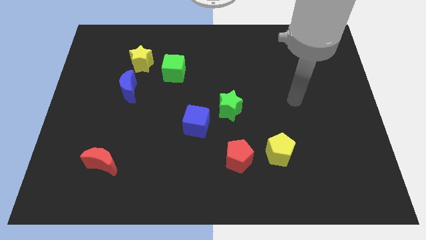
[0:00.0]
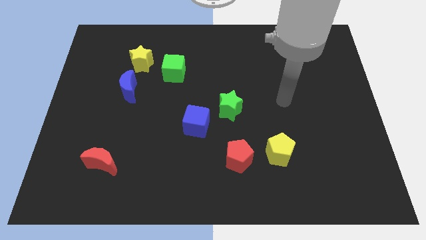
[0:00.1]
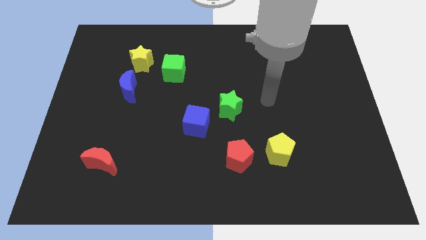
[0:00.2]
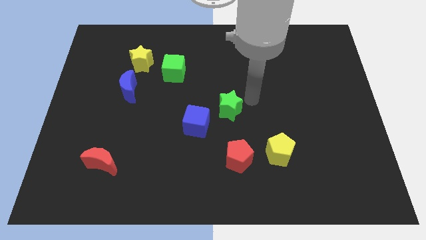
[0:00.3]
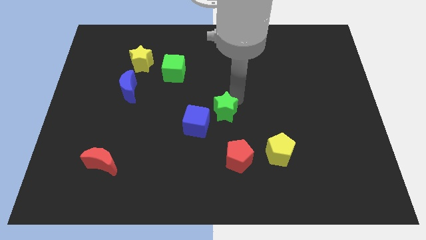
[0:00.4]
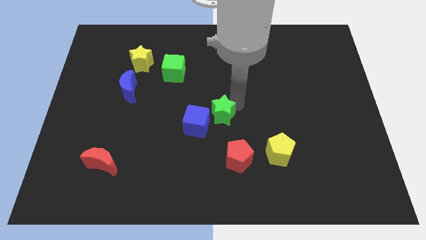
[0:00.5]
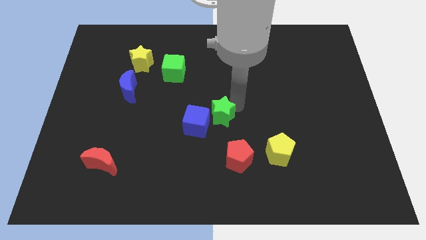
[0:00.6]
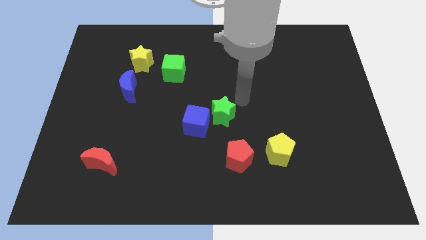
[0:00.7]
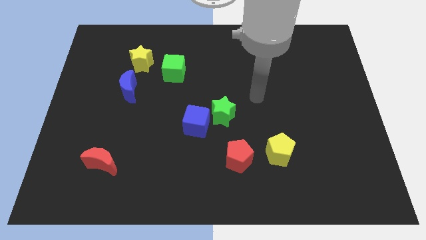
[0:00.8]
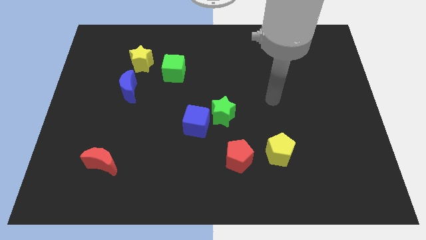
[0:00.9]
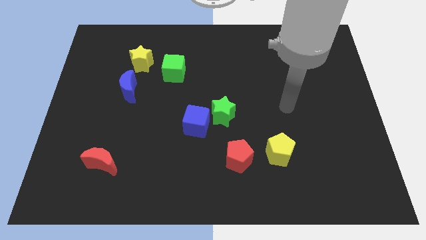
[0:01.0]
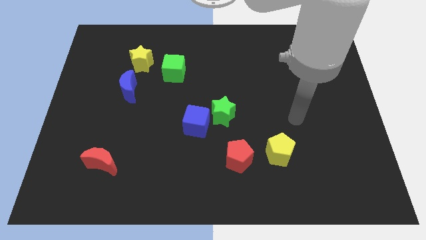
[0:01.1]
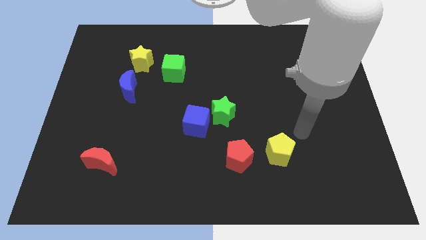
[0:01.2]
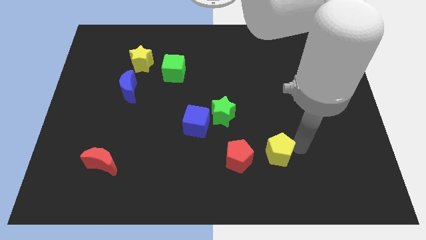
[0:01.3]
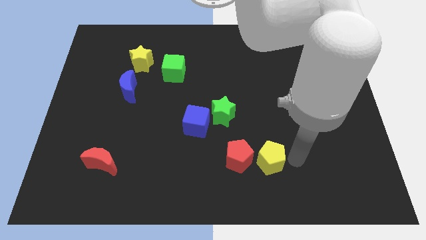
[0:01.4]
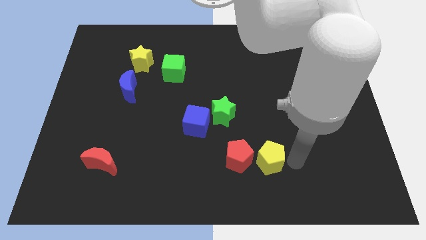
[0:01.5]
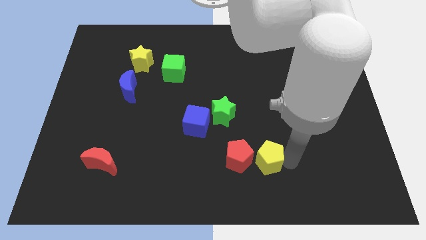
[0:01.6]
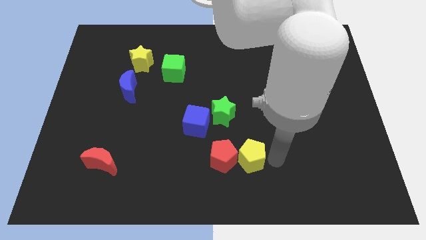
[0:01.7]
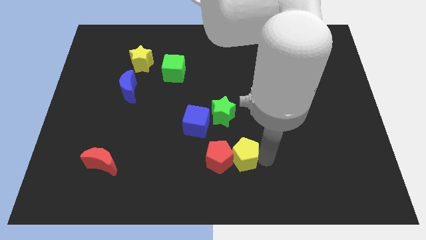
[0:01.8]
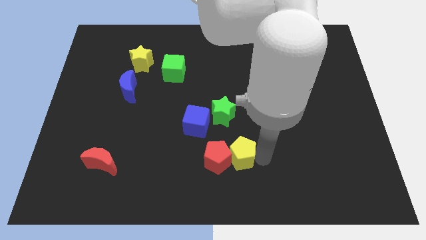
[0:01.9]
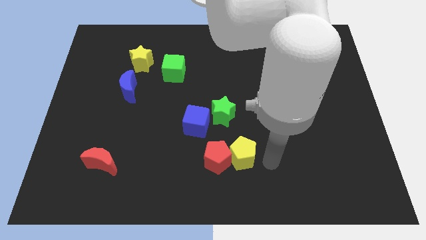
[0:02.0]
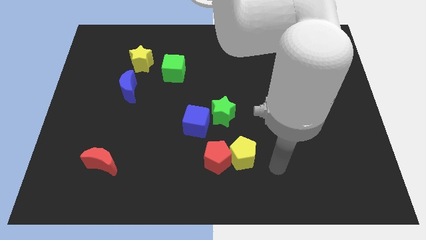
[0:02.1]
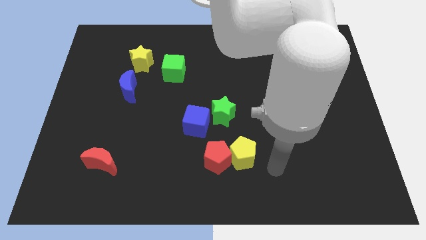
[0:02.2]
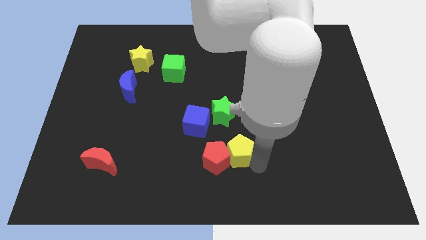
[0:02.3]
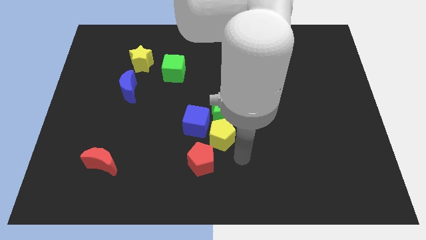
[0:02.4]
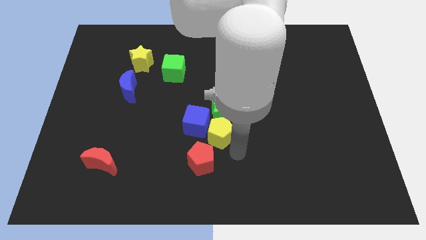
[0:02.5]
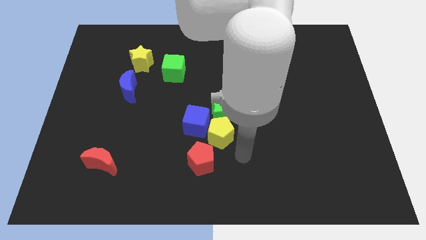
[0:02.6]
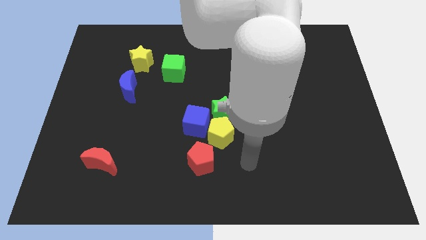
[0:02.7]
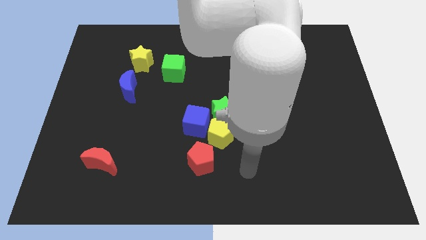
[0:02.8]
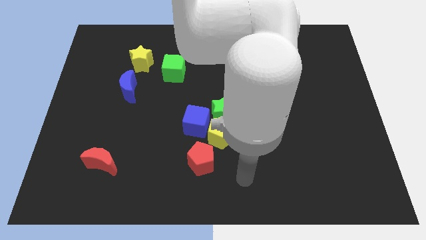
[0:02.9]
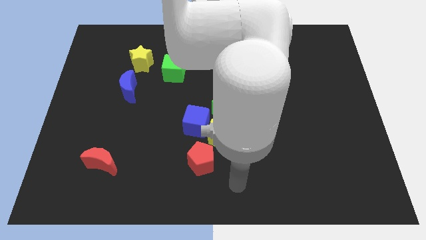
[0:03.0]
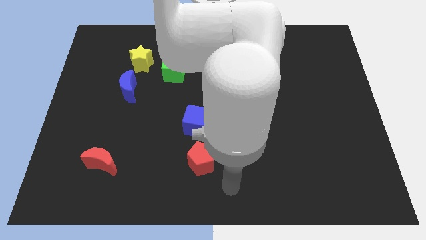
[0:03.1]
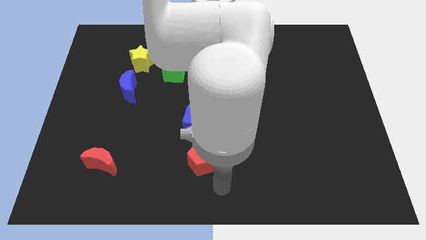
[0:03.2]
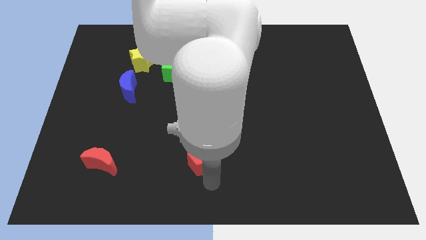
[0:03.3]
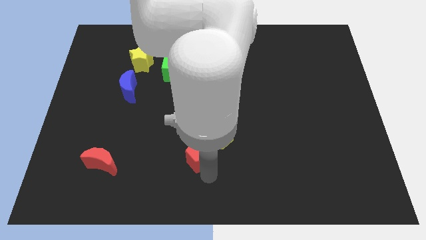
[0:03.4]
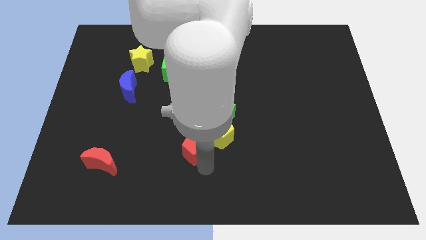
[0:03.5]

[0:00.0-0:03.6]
push the yellow pentagon and red pentagon close to the blue cube

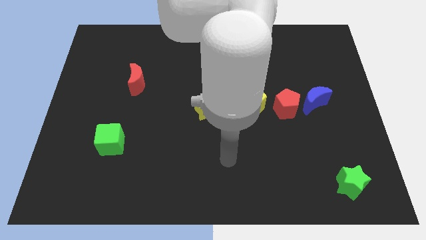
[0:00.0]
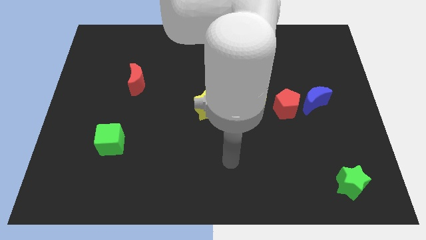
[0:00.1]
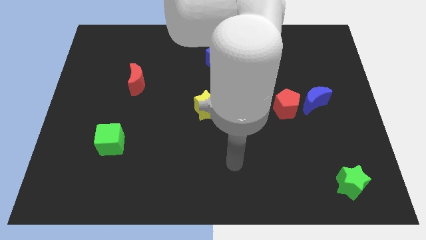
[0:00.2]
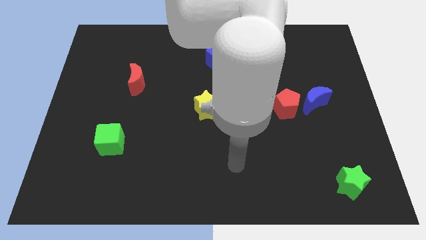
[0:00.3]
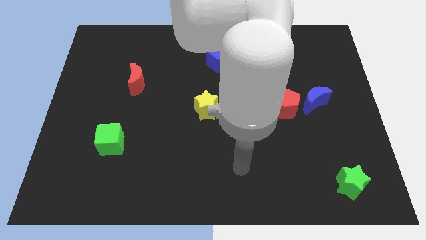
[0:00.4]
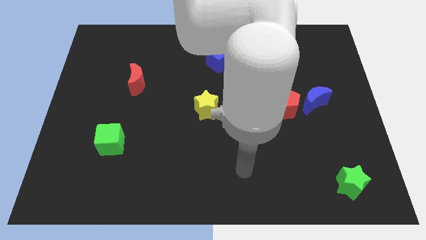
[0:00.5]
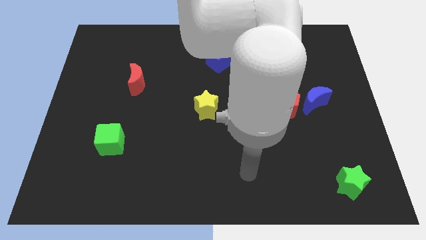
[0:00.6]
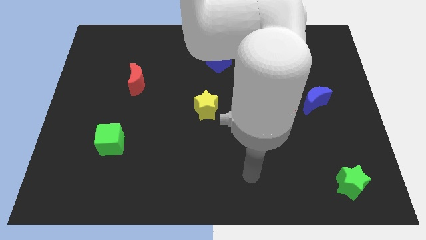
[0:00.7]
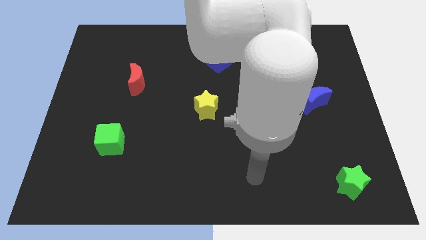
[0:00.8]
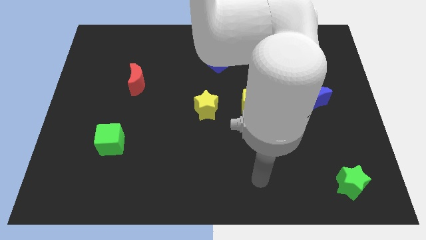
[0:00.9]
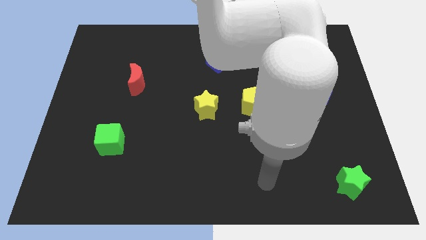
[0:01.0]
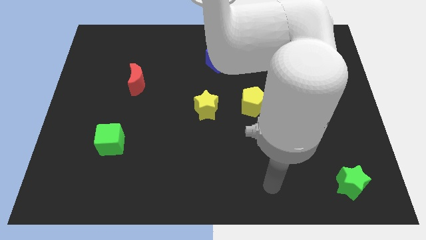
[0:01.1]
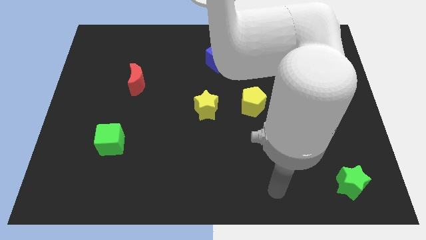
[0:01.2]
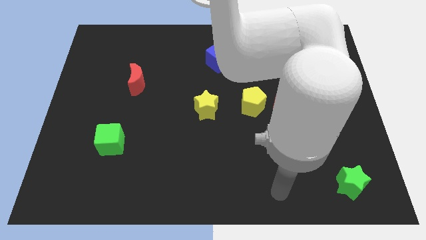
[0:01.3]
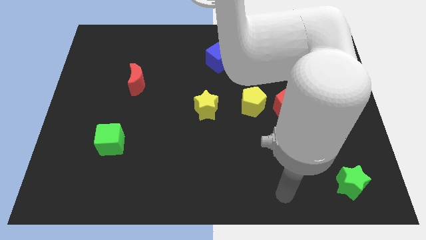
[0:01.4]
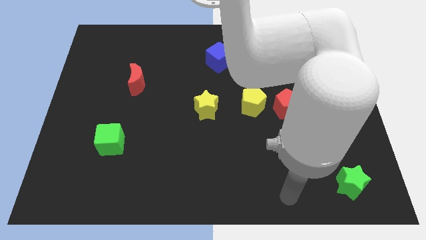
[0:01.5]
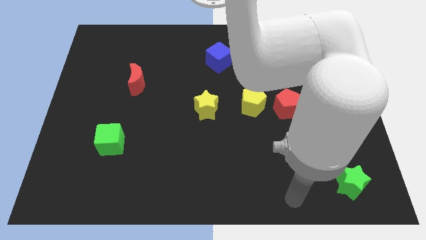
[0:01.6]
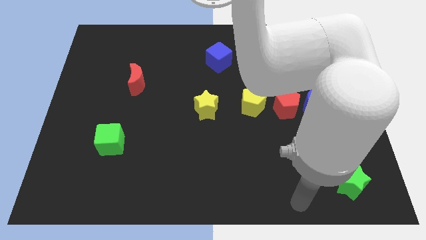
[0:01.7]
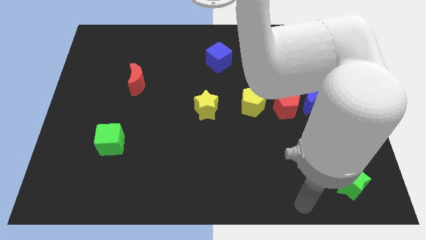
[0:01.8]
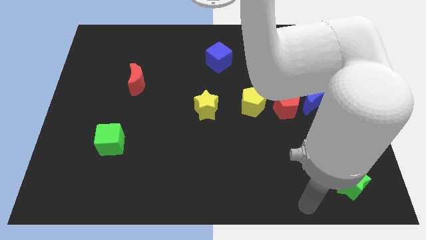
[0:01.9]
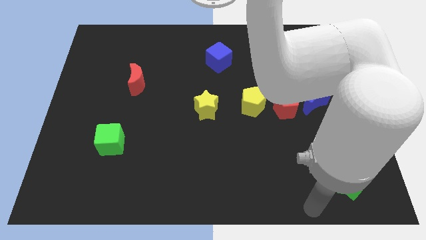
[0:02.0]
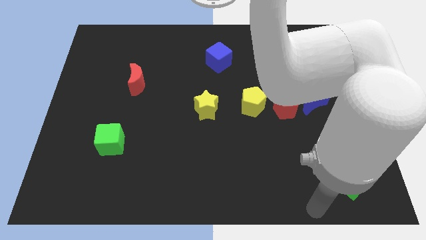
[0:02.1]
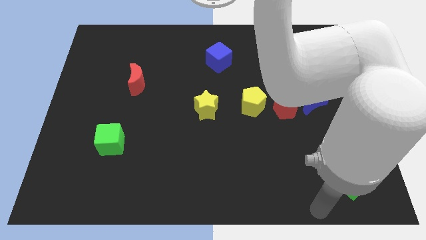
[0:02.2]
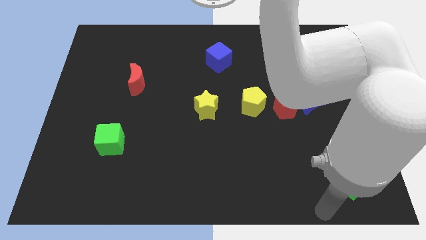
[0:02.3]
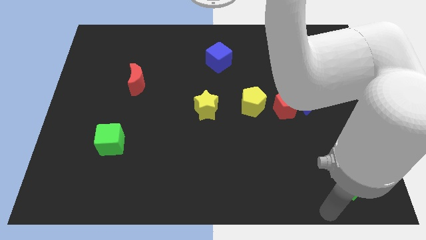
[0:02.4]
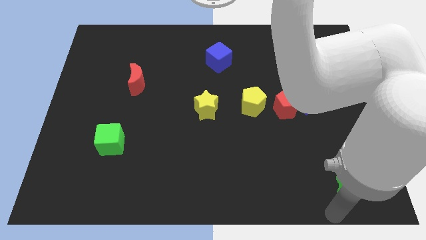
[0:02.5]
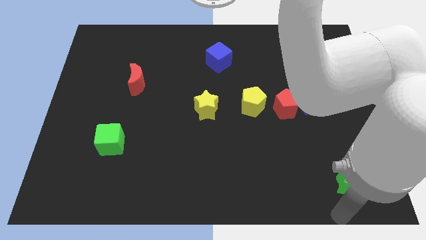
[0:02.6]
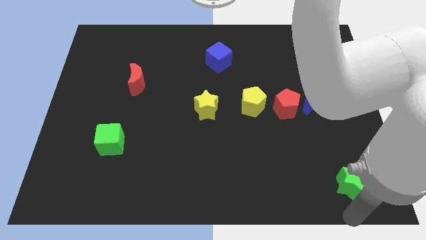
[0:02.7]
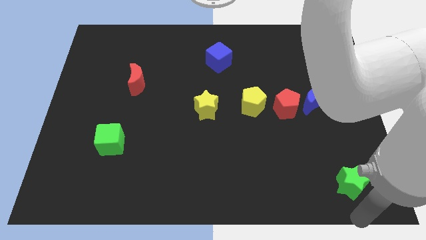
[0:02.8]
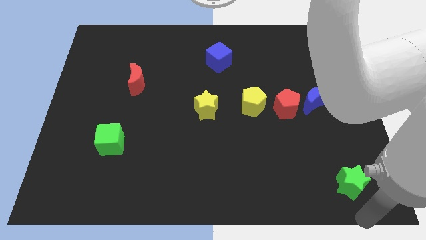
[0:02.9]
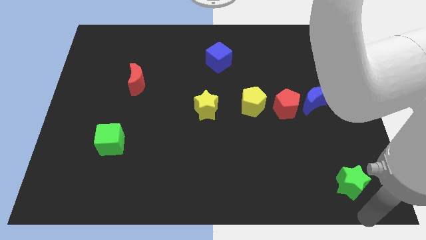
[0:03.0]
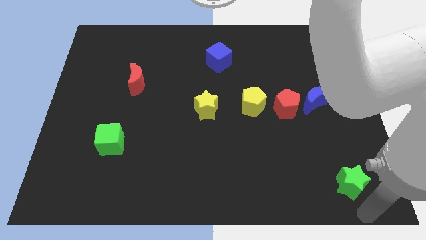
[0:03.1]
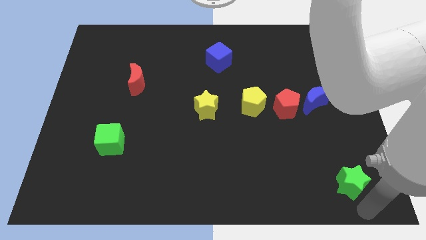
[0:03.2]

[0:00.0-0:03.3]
point your hand below the green star

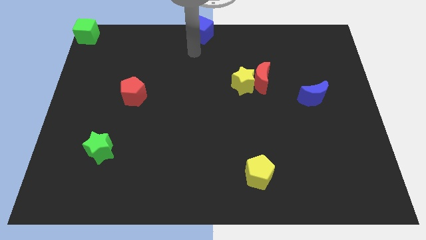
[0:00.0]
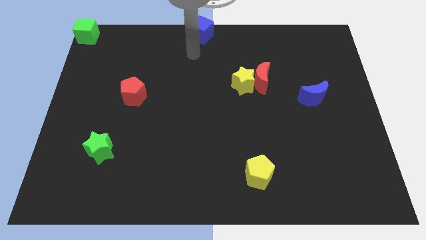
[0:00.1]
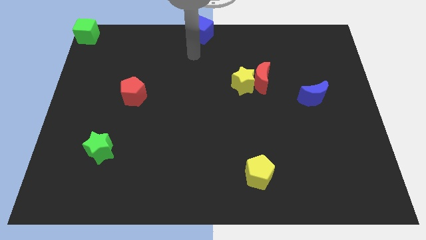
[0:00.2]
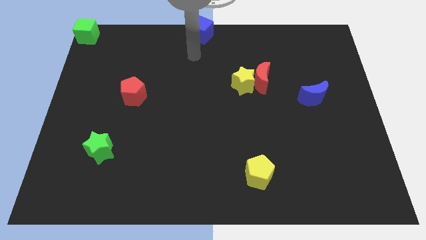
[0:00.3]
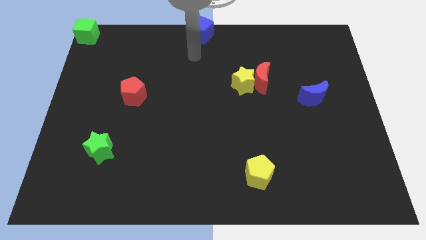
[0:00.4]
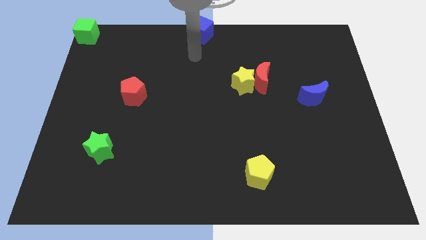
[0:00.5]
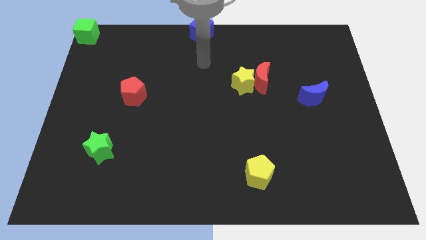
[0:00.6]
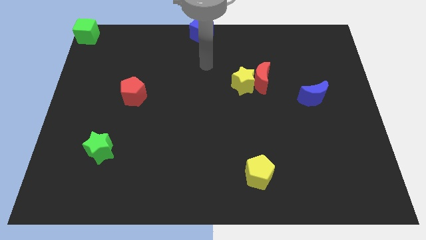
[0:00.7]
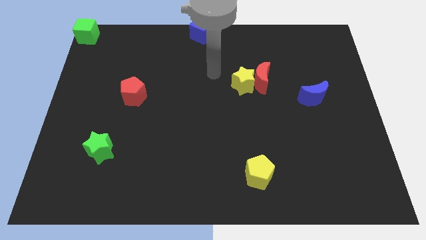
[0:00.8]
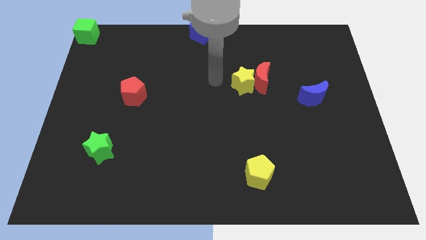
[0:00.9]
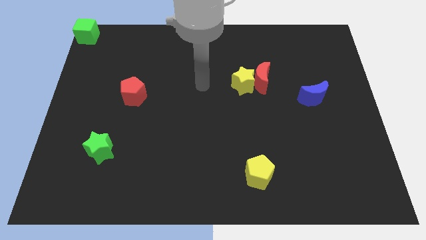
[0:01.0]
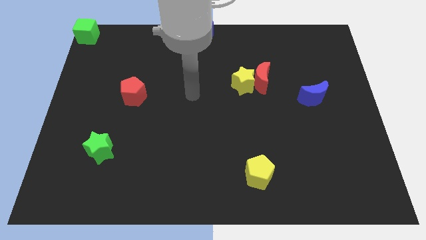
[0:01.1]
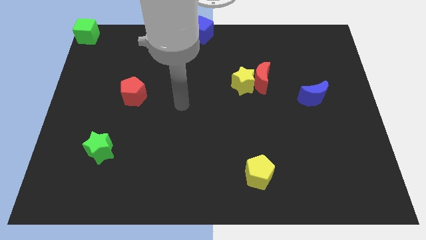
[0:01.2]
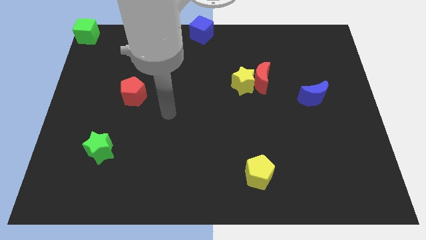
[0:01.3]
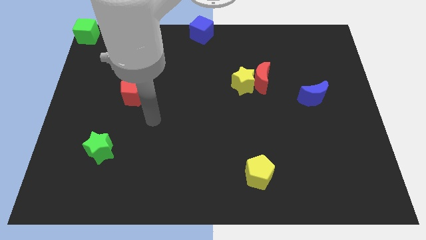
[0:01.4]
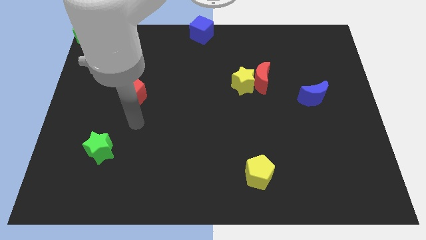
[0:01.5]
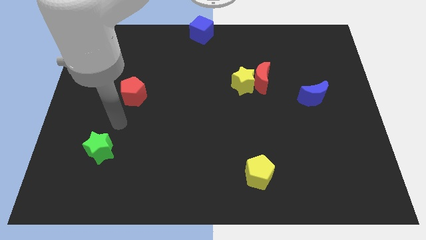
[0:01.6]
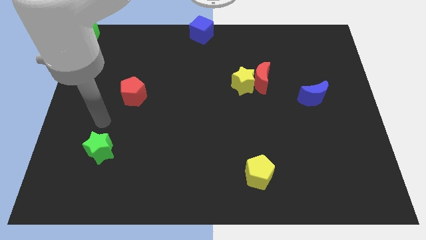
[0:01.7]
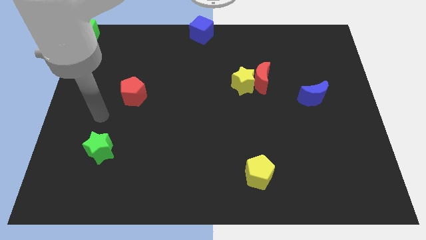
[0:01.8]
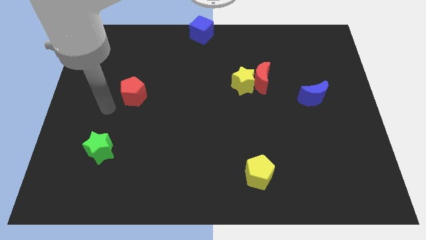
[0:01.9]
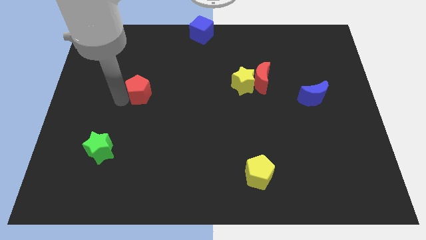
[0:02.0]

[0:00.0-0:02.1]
move the arm near the red pentagon
